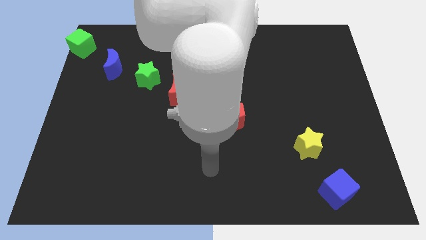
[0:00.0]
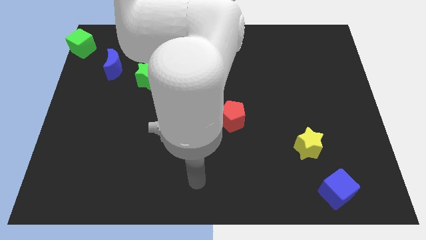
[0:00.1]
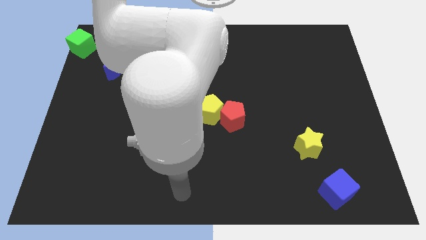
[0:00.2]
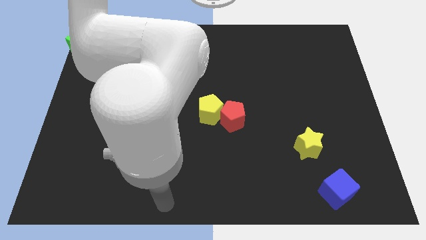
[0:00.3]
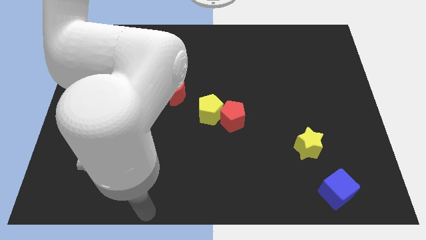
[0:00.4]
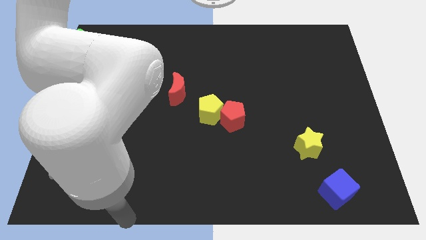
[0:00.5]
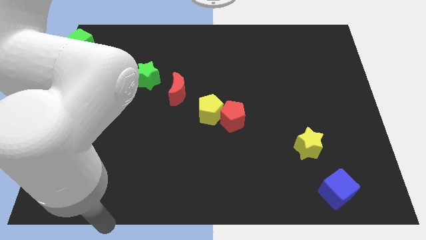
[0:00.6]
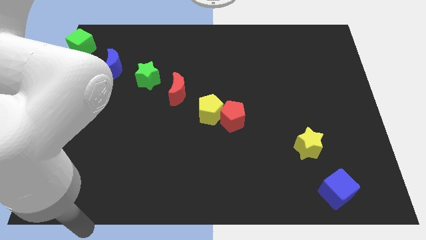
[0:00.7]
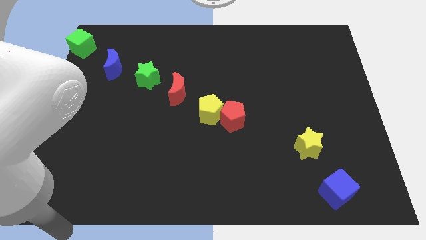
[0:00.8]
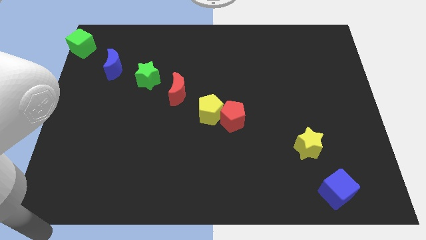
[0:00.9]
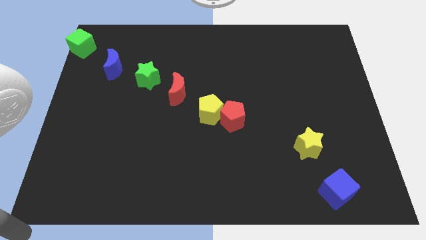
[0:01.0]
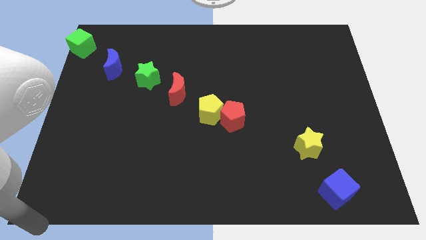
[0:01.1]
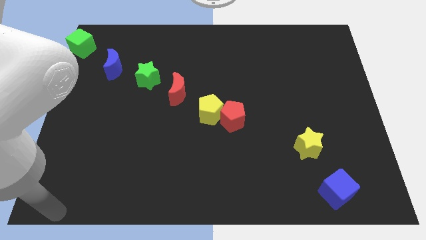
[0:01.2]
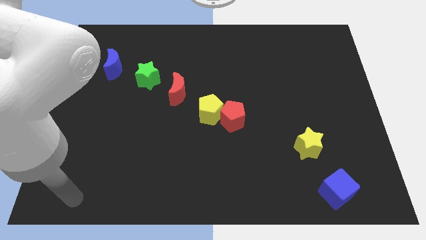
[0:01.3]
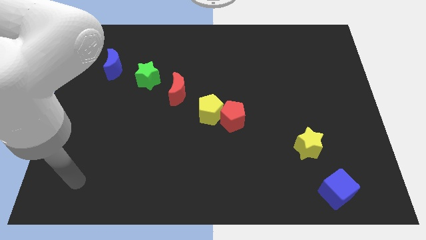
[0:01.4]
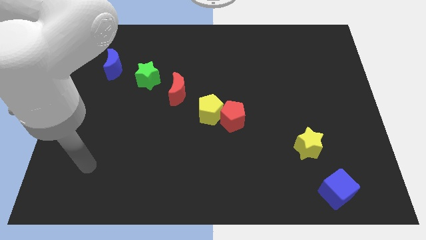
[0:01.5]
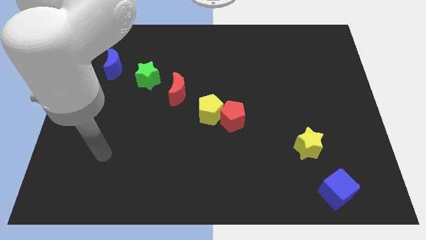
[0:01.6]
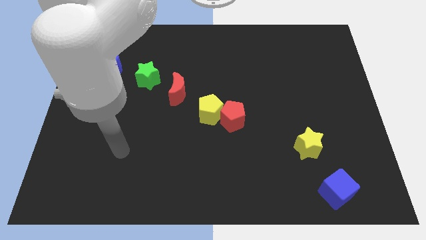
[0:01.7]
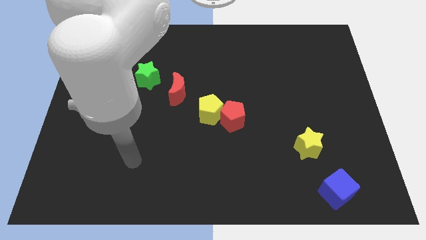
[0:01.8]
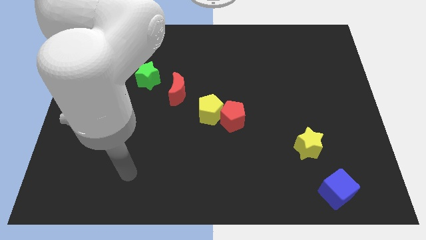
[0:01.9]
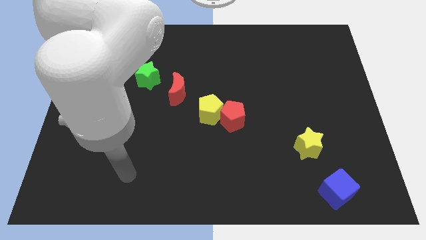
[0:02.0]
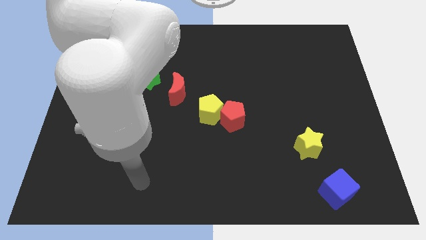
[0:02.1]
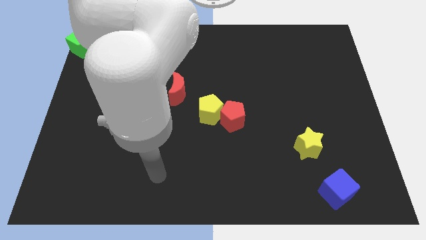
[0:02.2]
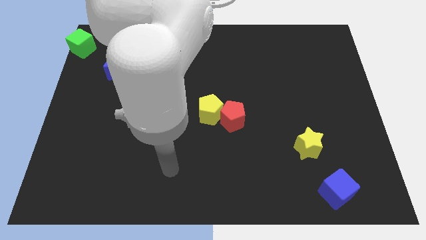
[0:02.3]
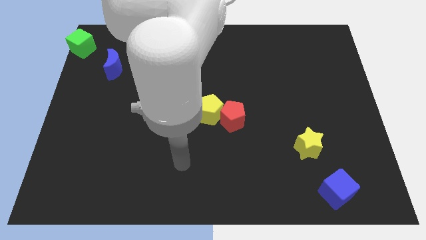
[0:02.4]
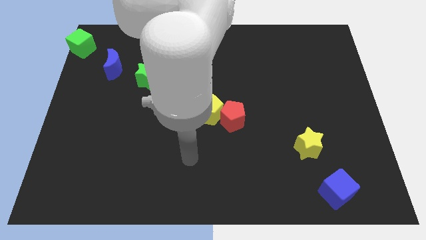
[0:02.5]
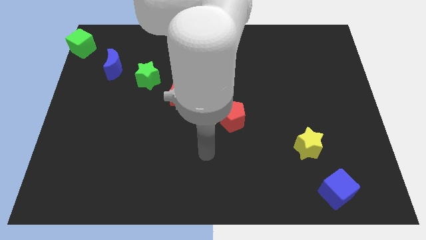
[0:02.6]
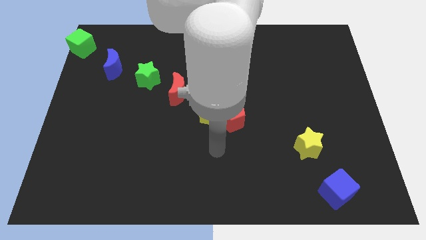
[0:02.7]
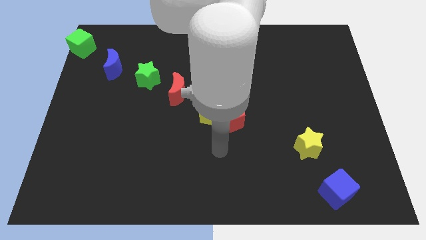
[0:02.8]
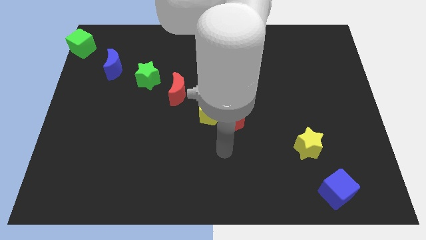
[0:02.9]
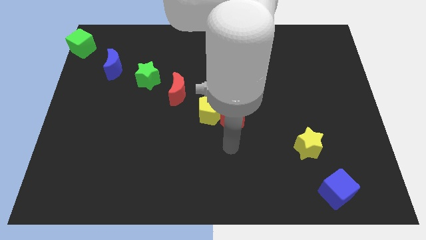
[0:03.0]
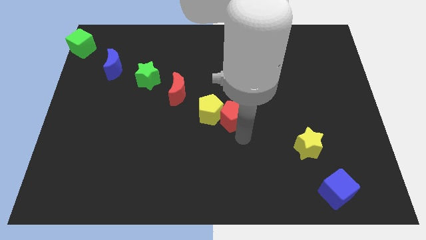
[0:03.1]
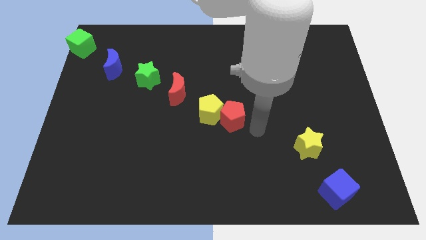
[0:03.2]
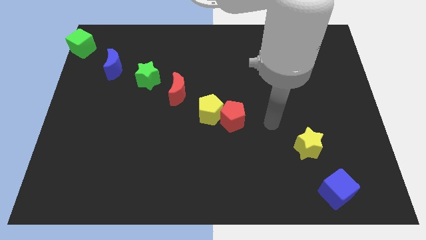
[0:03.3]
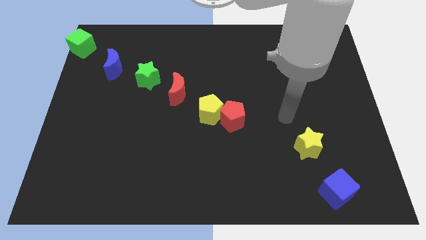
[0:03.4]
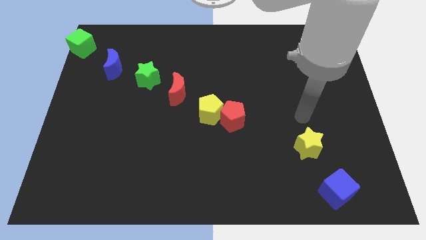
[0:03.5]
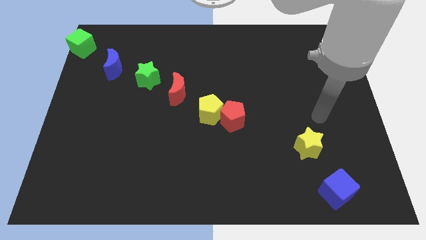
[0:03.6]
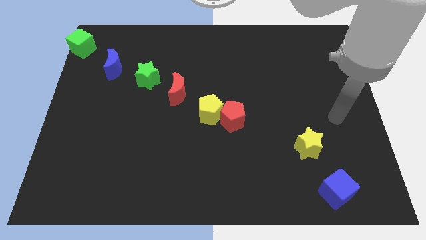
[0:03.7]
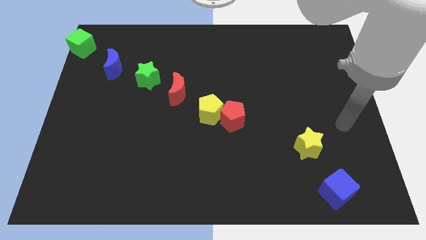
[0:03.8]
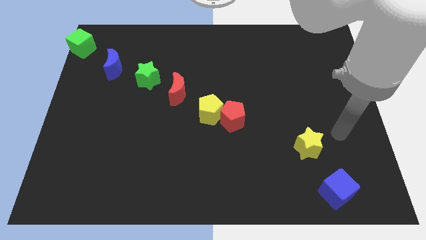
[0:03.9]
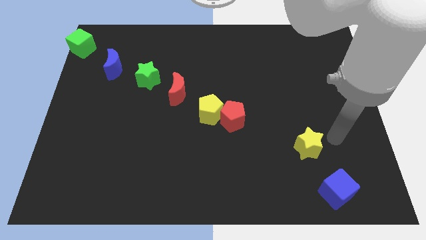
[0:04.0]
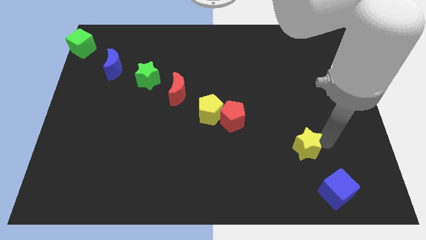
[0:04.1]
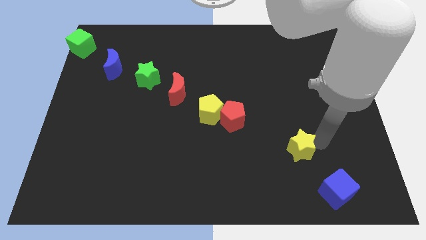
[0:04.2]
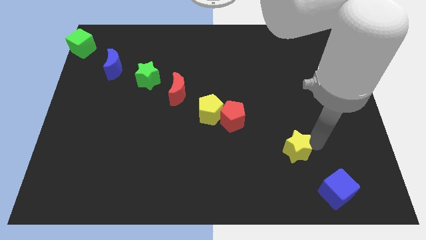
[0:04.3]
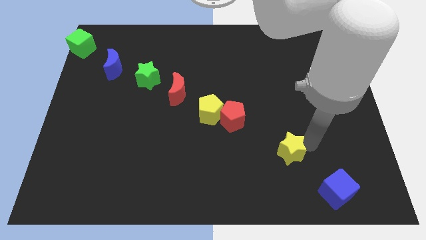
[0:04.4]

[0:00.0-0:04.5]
place your arm at the right of the yellow star

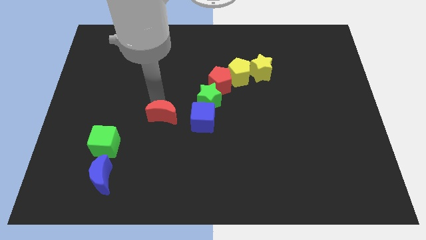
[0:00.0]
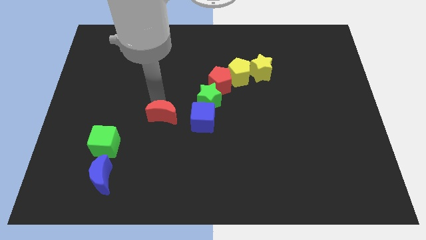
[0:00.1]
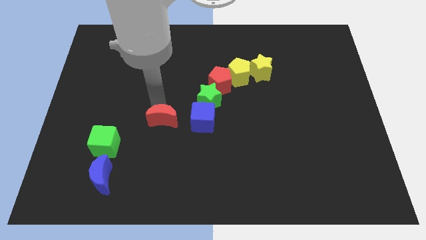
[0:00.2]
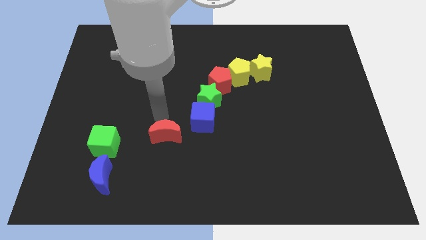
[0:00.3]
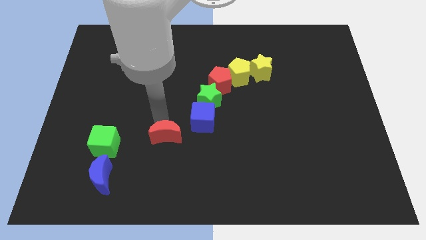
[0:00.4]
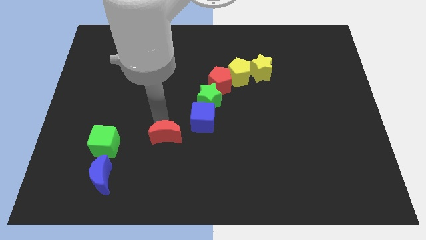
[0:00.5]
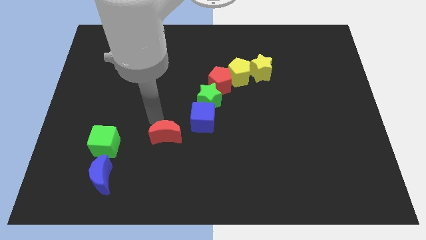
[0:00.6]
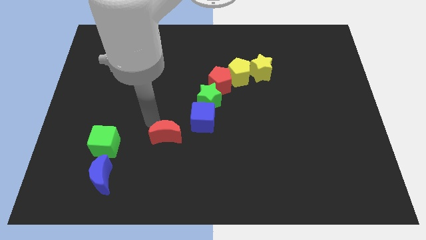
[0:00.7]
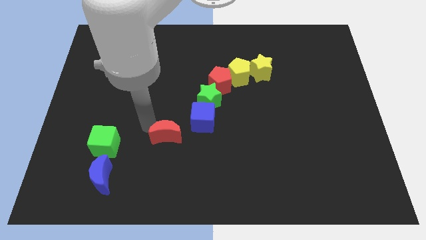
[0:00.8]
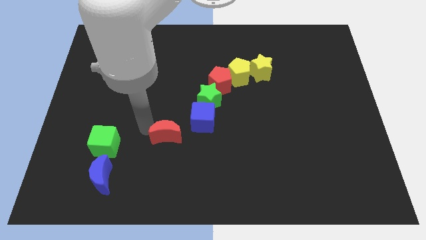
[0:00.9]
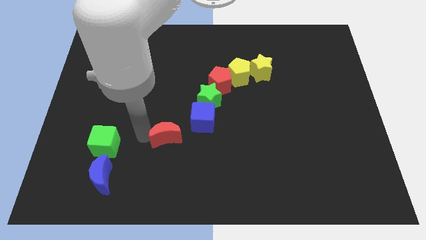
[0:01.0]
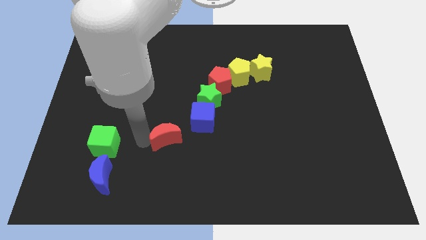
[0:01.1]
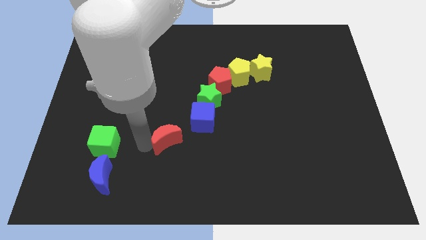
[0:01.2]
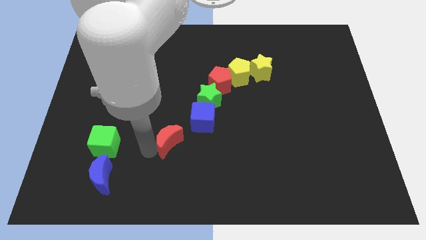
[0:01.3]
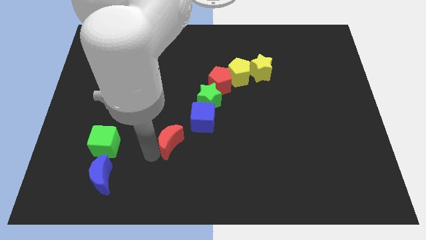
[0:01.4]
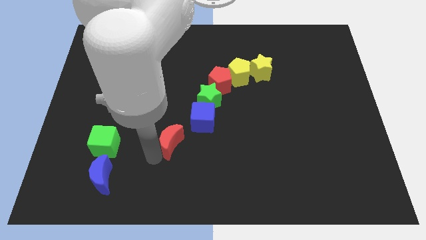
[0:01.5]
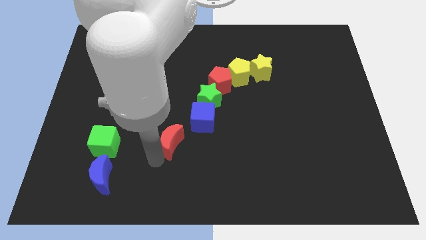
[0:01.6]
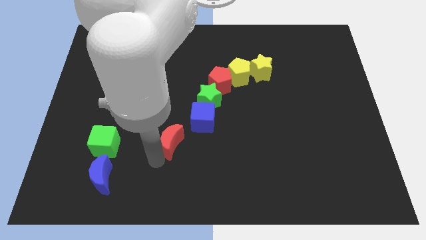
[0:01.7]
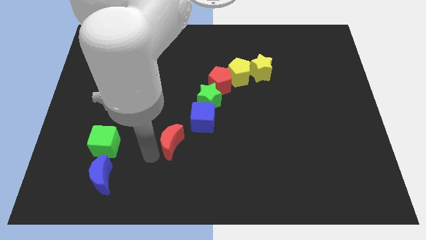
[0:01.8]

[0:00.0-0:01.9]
push the red crescent to the bottom left of the blue cube

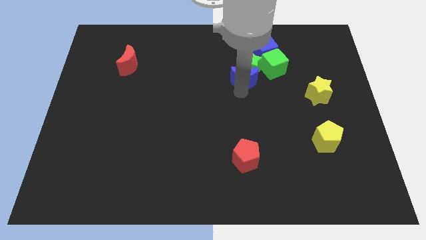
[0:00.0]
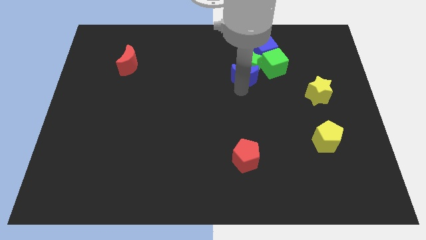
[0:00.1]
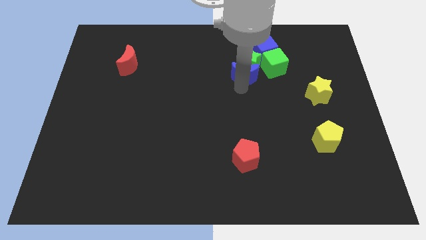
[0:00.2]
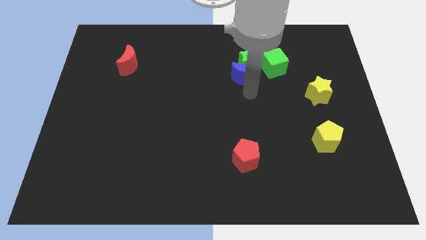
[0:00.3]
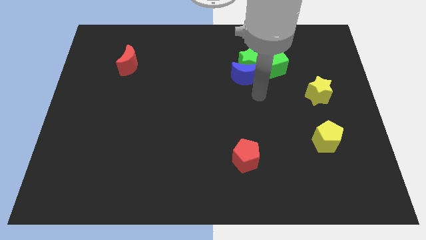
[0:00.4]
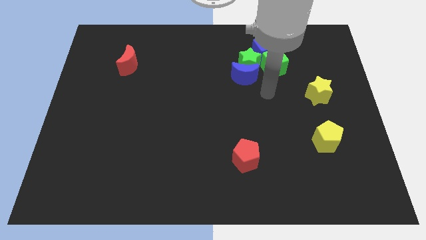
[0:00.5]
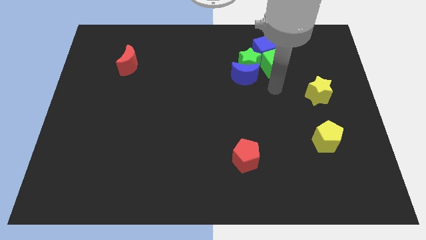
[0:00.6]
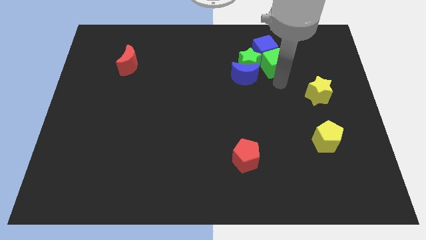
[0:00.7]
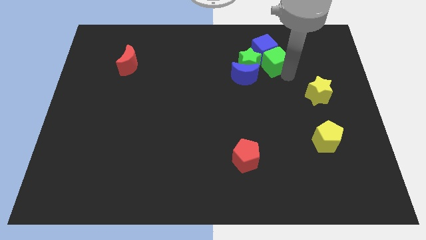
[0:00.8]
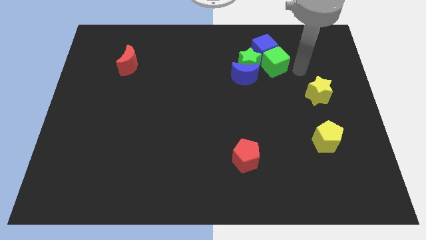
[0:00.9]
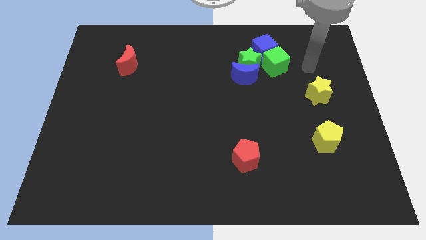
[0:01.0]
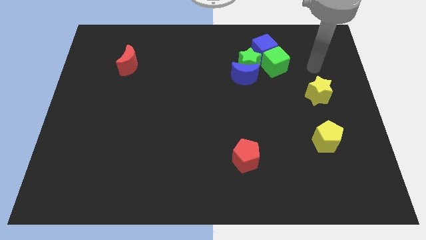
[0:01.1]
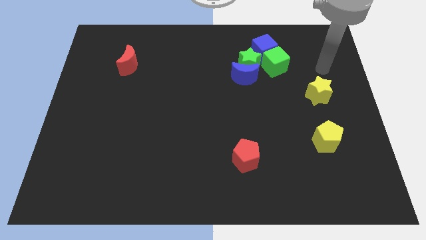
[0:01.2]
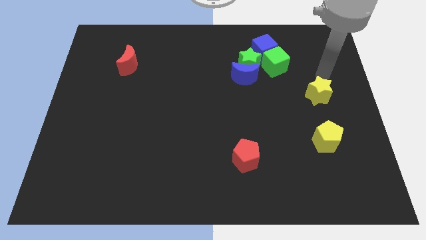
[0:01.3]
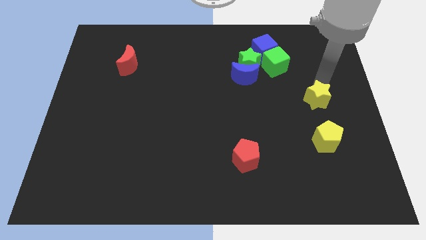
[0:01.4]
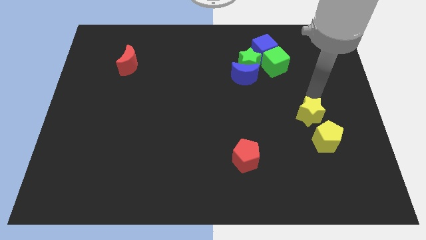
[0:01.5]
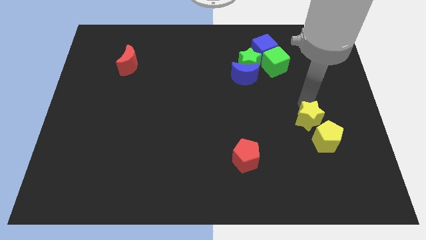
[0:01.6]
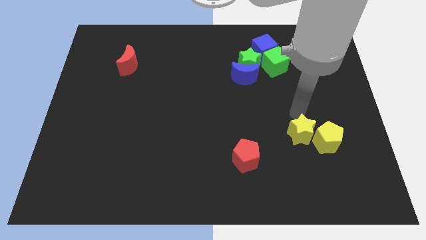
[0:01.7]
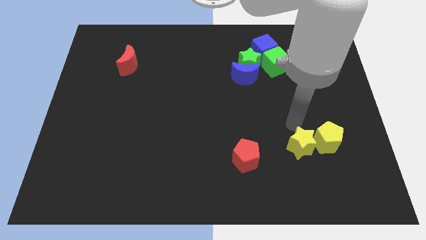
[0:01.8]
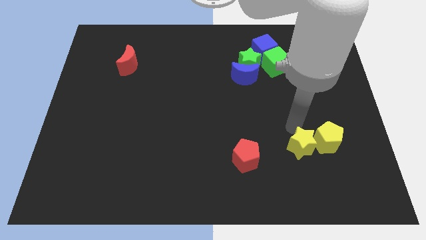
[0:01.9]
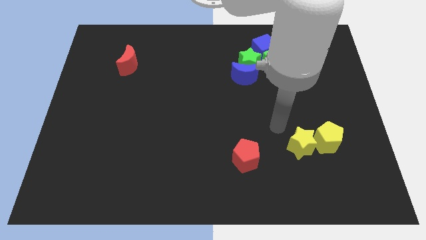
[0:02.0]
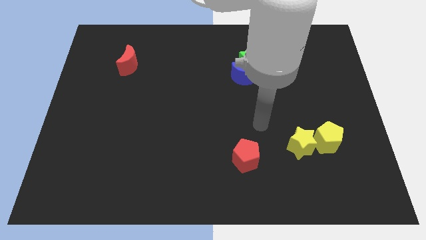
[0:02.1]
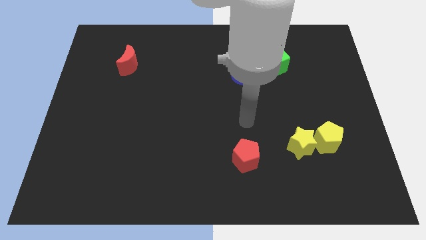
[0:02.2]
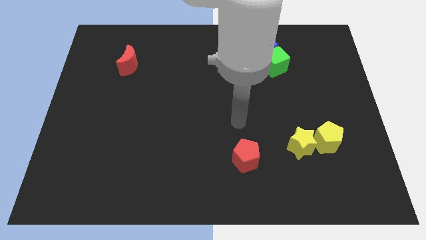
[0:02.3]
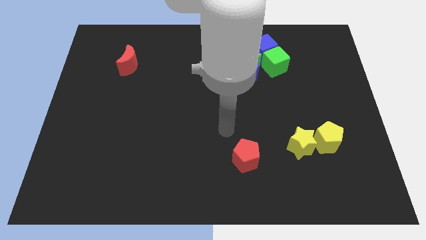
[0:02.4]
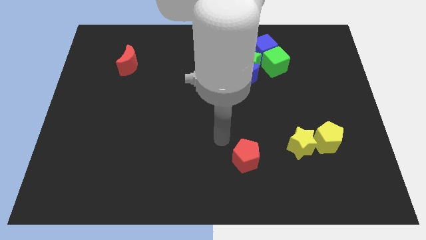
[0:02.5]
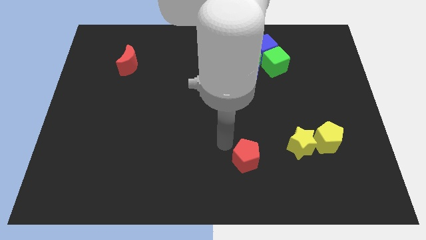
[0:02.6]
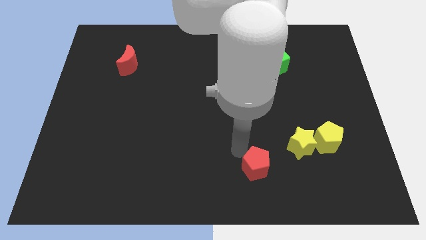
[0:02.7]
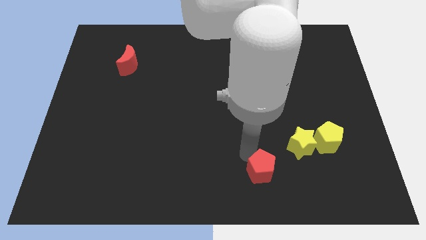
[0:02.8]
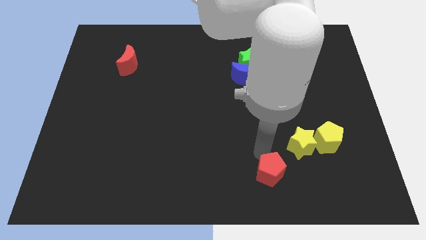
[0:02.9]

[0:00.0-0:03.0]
place the yellow star to the left side of the yellow pentagon
